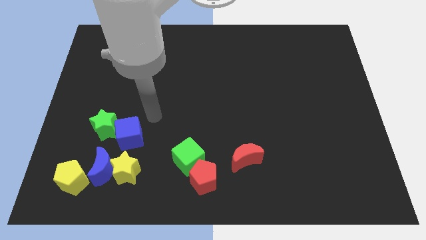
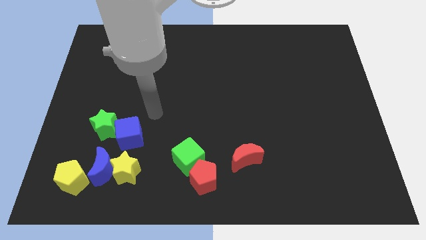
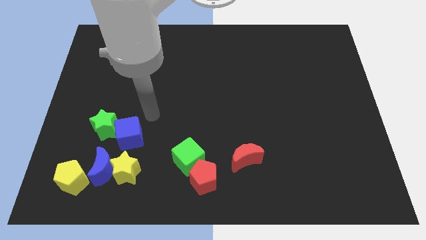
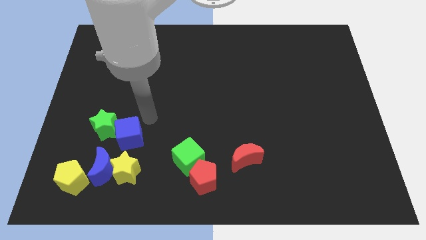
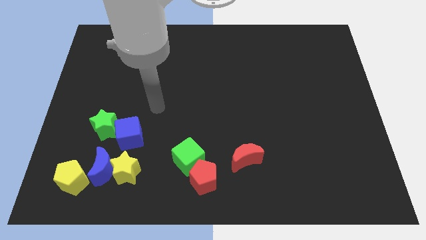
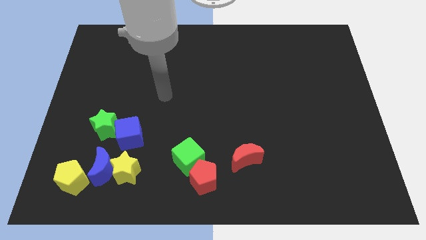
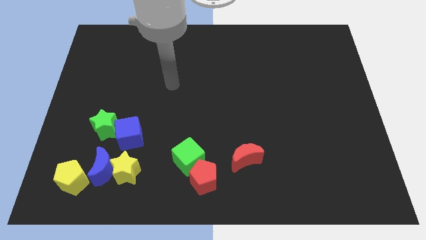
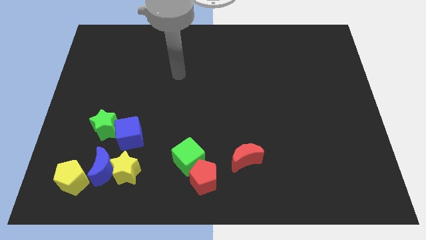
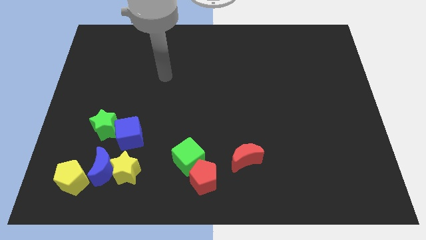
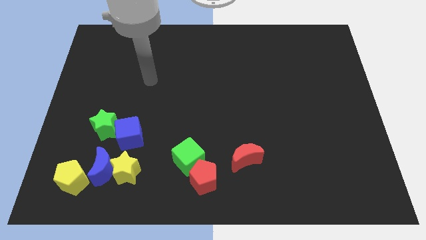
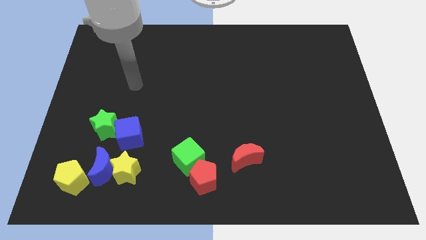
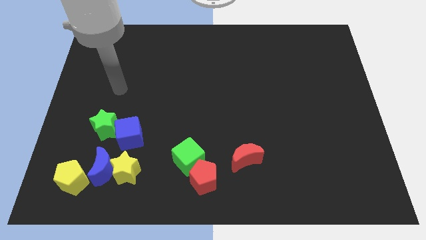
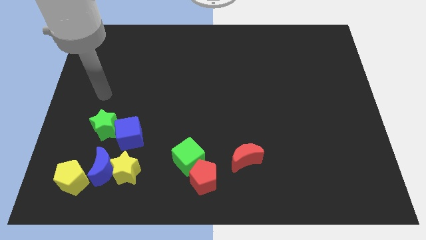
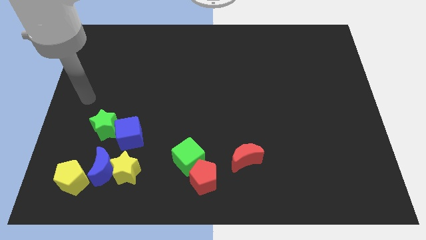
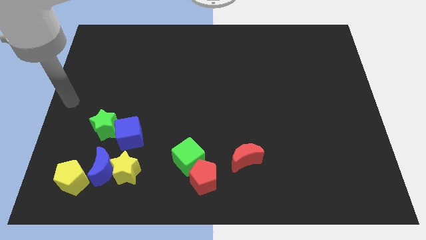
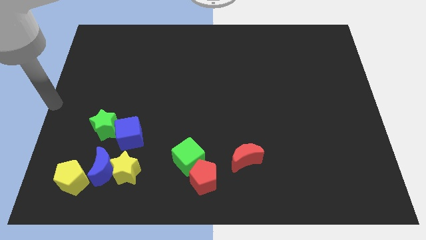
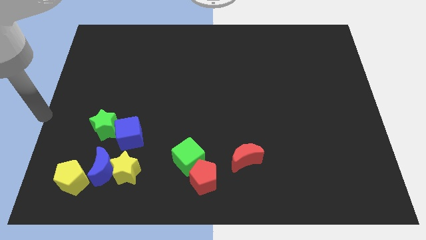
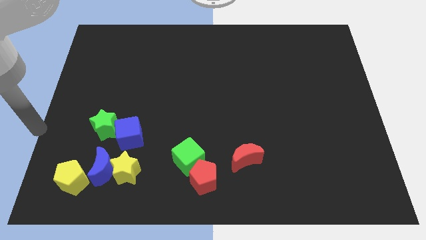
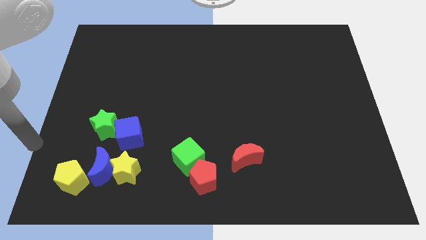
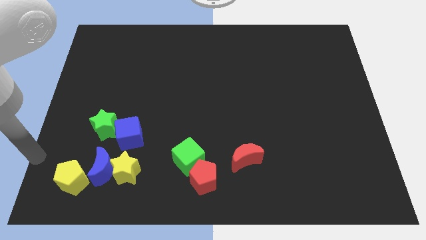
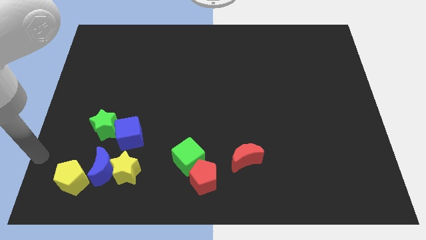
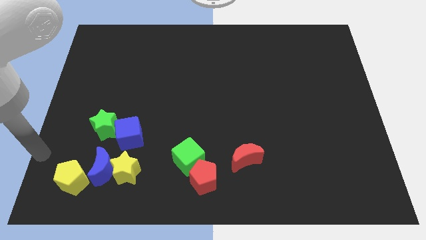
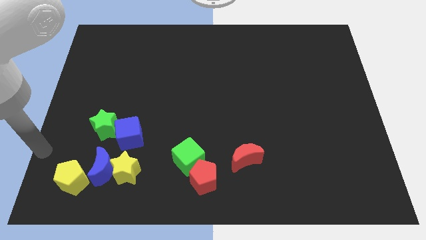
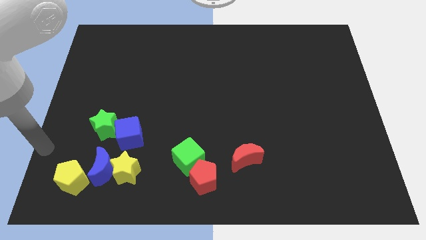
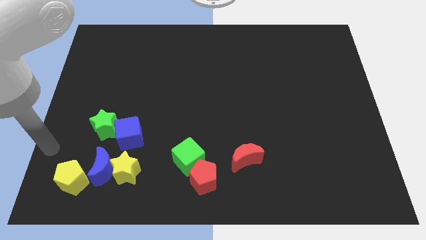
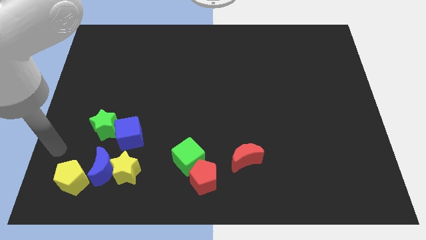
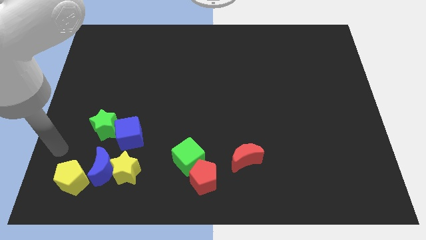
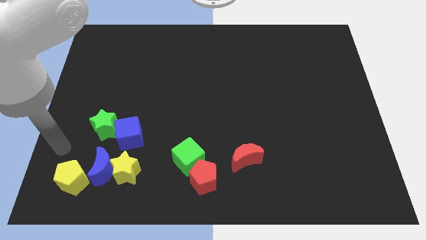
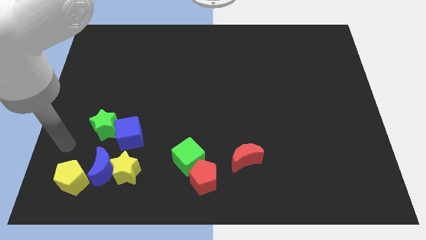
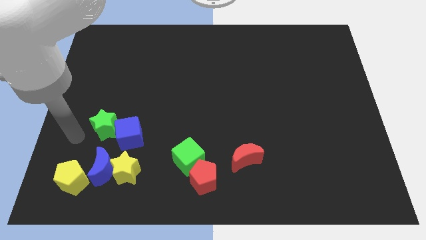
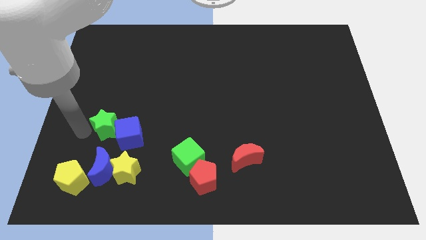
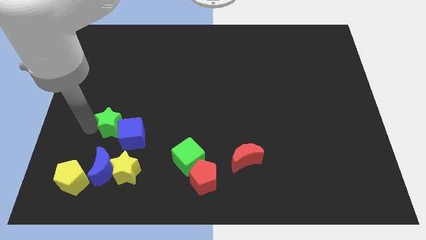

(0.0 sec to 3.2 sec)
move your arm to the left of the green star

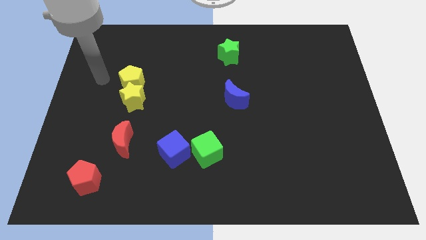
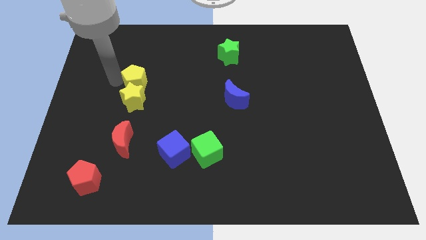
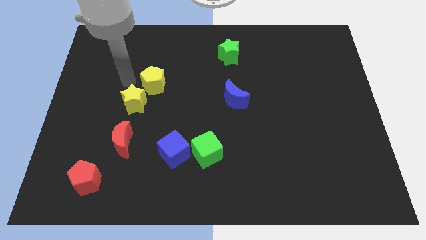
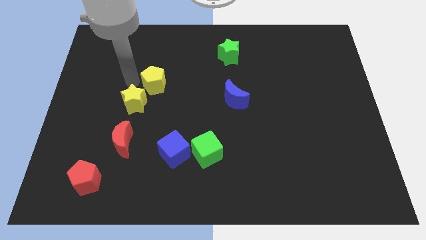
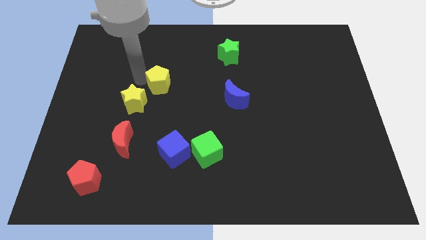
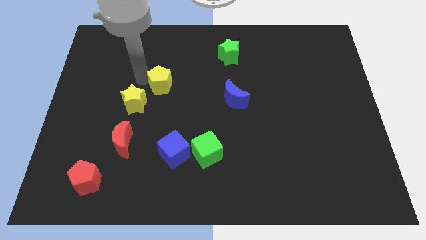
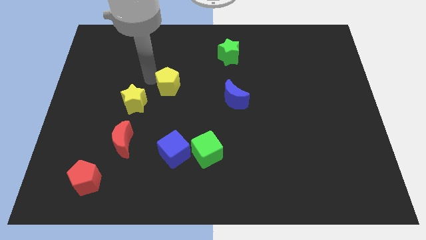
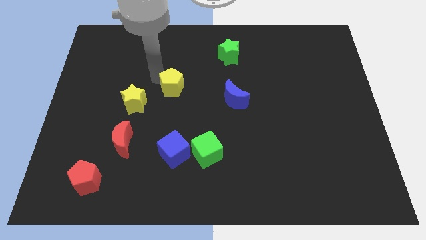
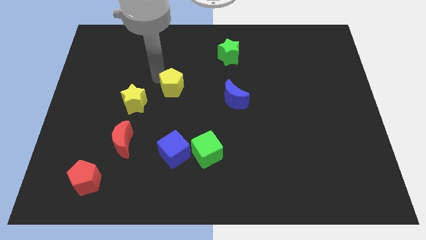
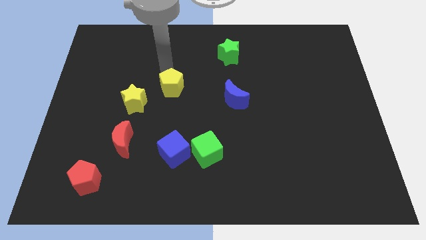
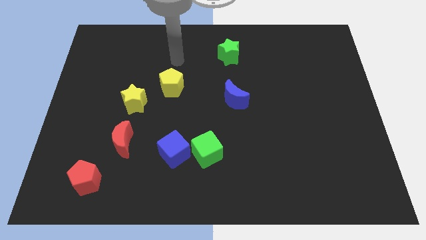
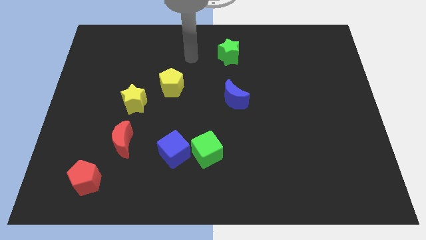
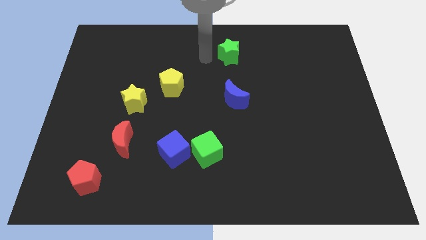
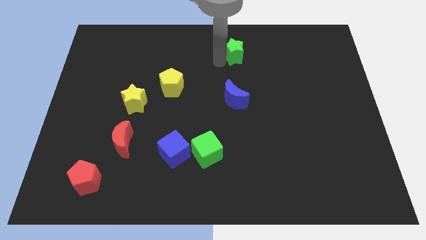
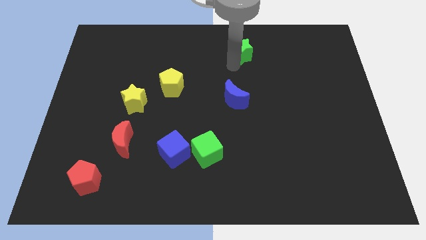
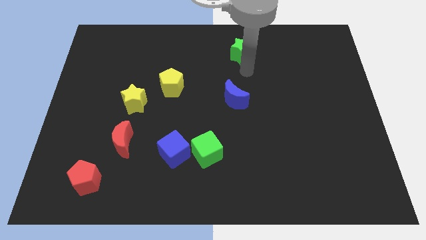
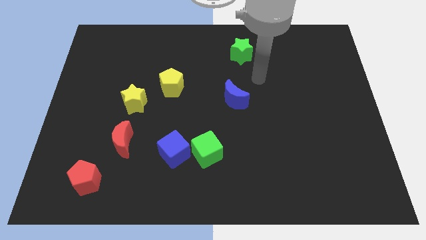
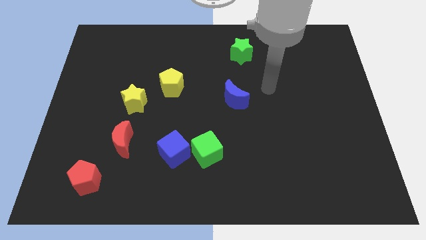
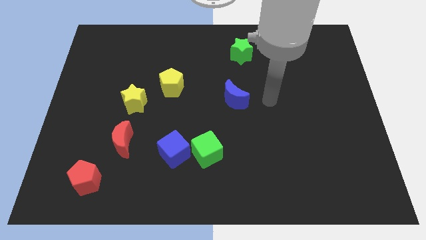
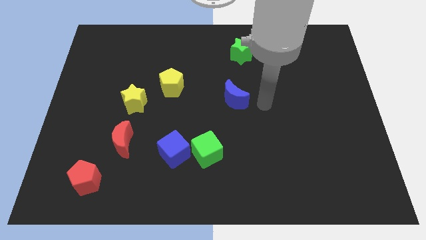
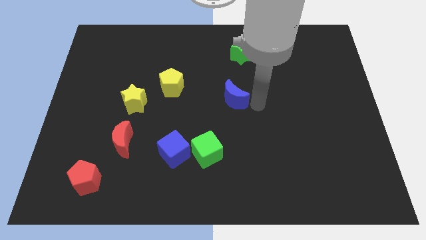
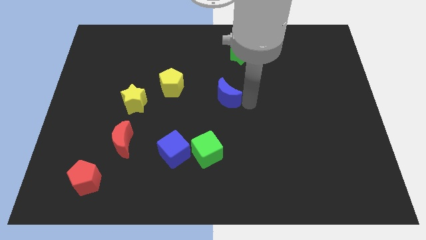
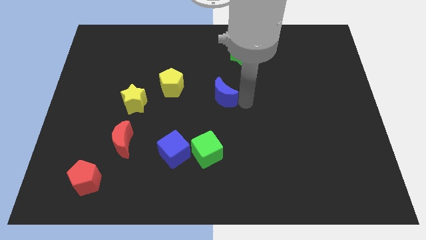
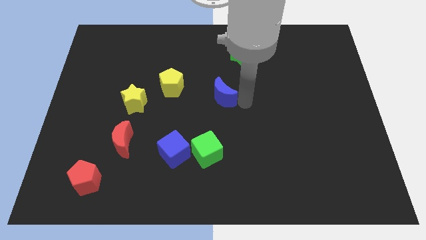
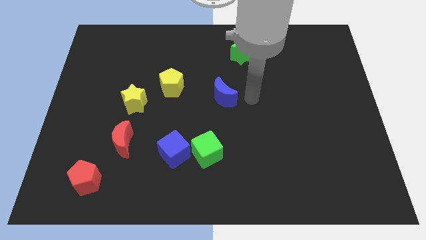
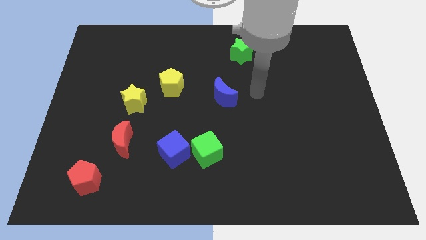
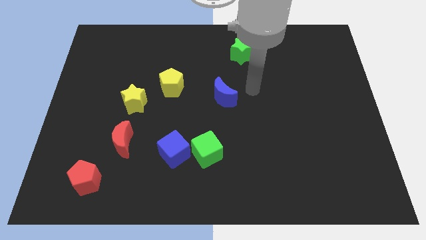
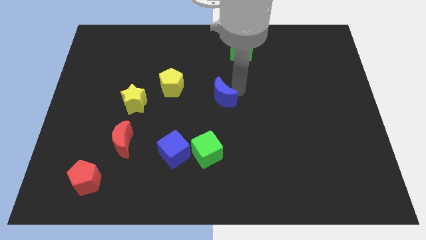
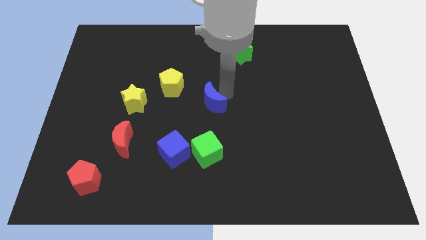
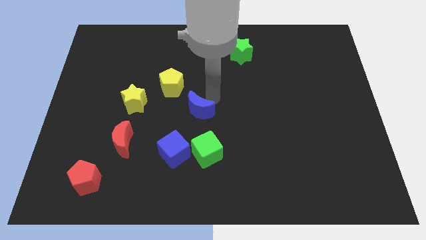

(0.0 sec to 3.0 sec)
push blue crescent above green cube

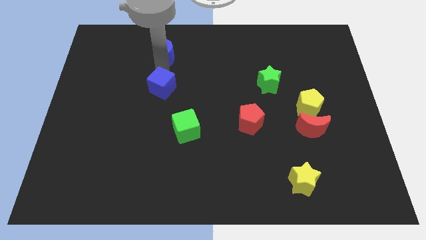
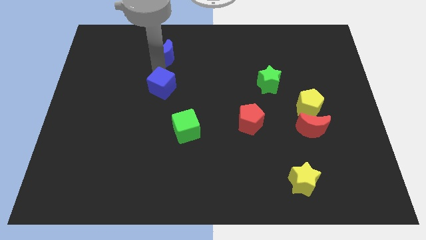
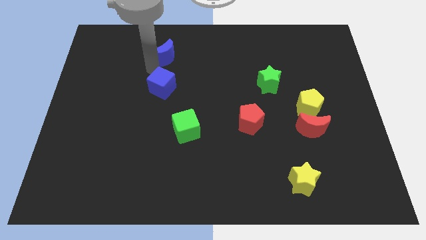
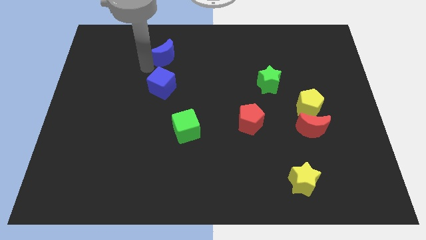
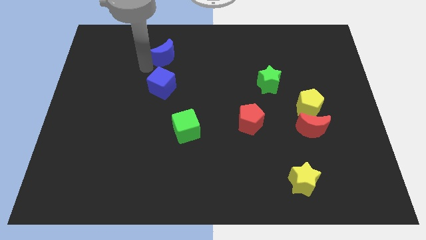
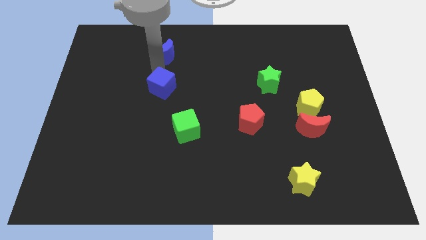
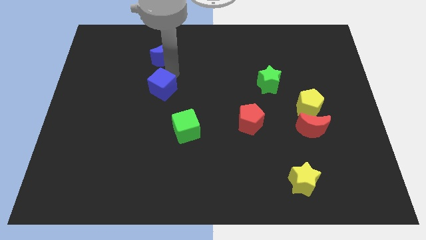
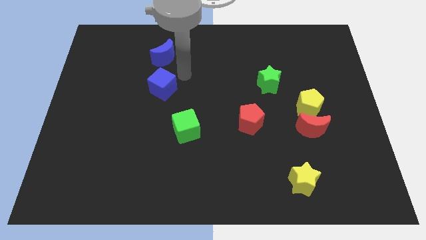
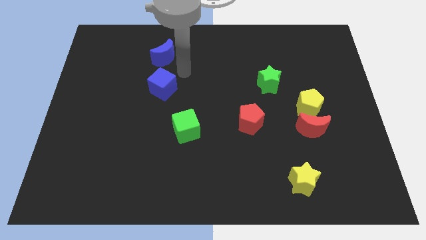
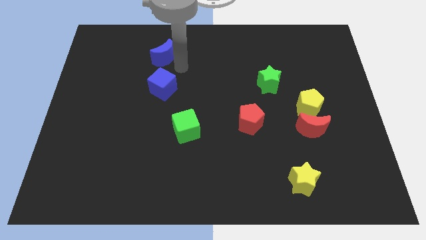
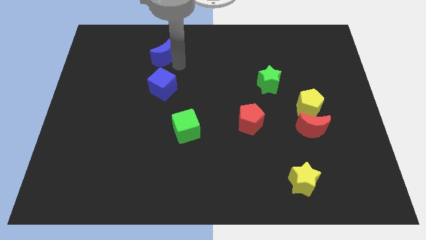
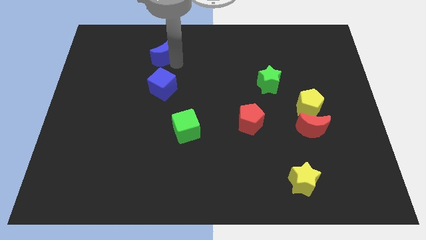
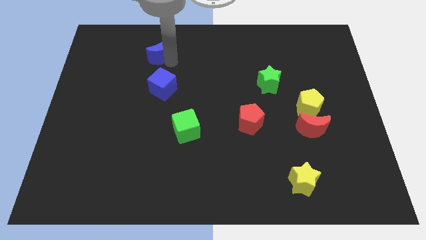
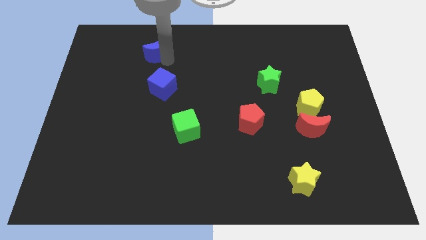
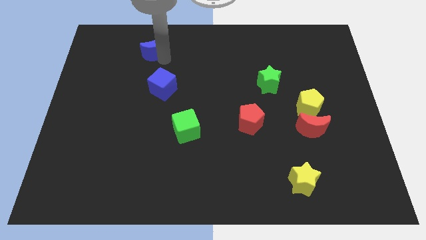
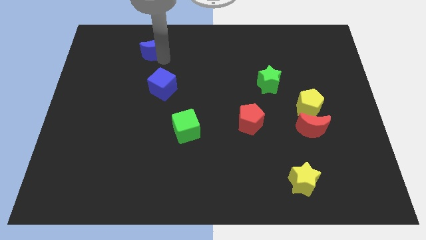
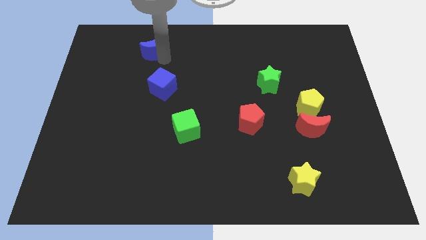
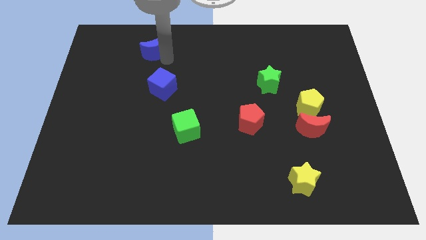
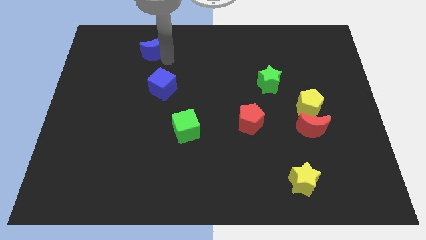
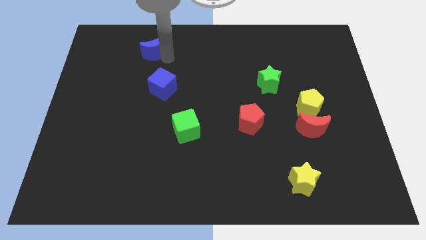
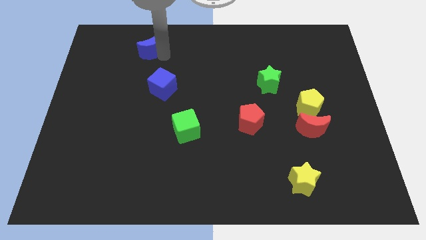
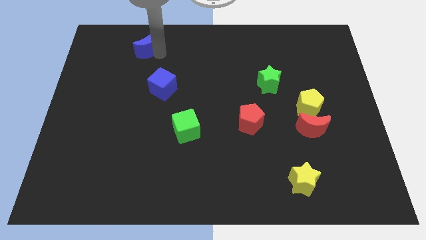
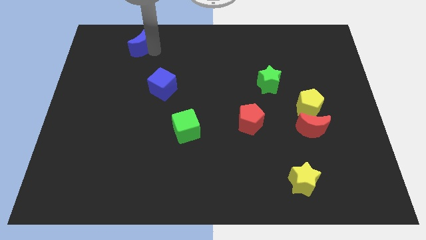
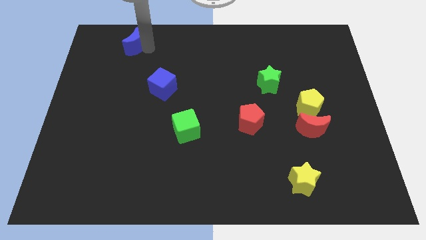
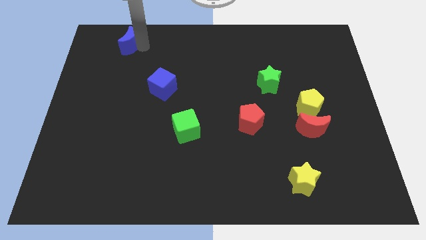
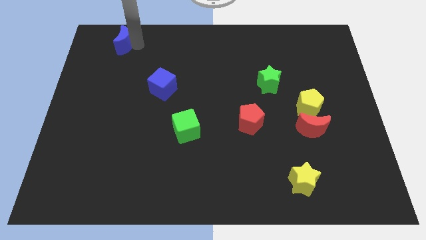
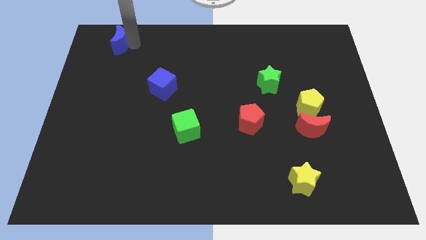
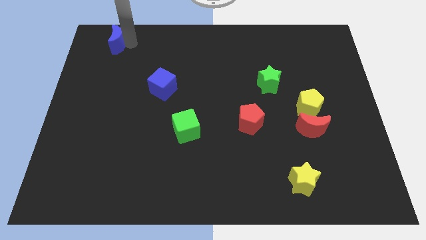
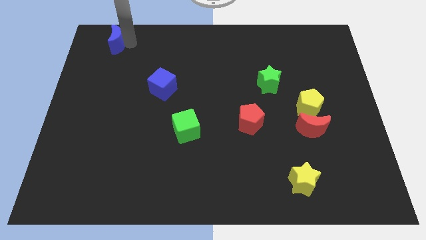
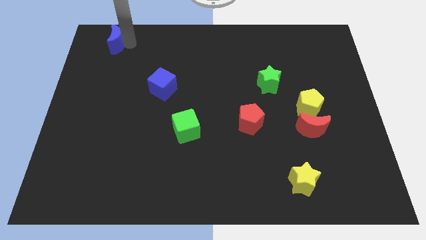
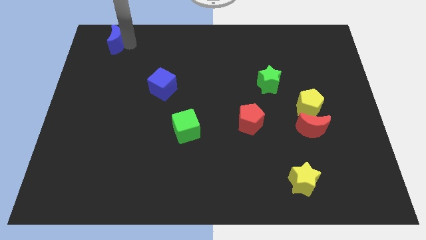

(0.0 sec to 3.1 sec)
slide blue moon towards top left
